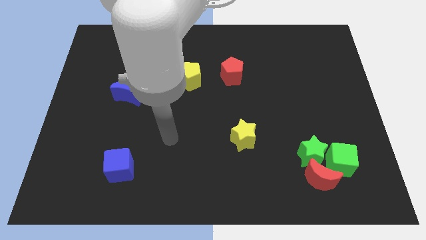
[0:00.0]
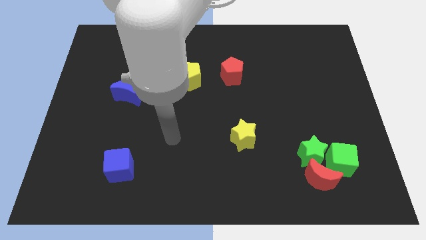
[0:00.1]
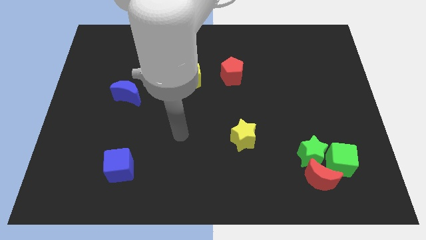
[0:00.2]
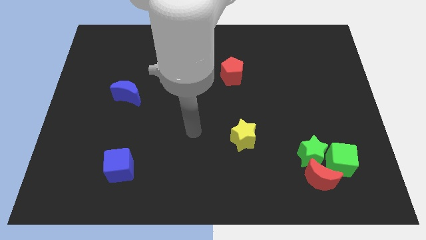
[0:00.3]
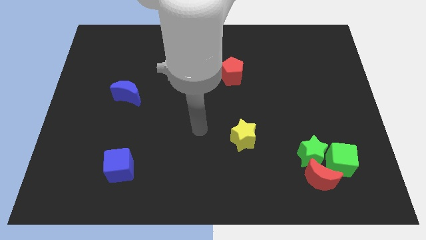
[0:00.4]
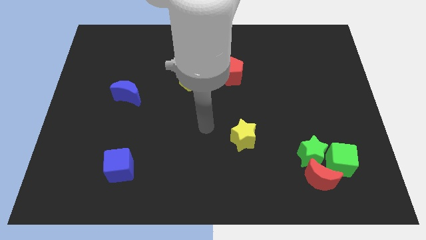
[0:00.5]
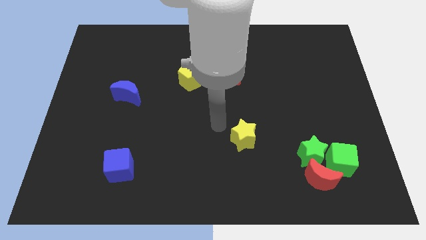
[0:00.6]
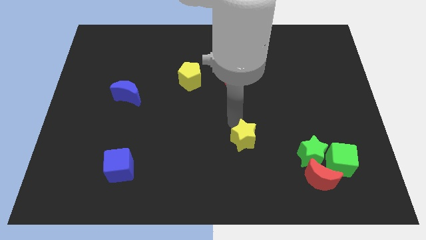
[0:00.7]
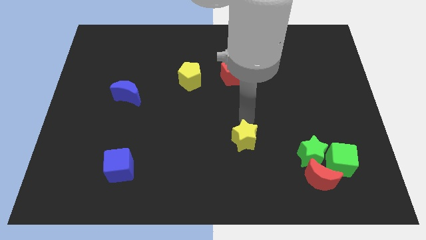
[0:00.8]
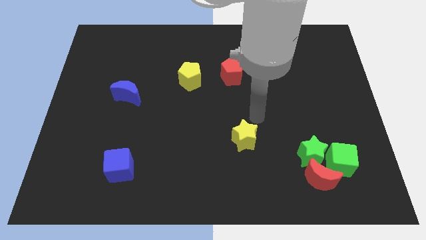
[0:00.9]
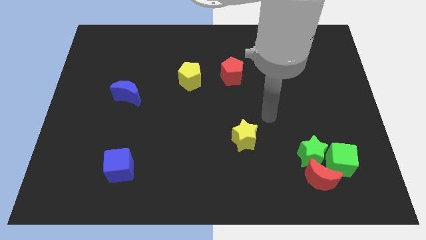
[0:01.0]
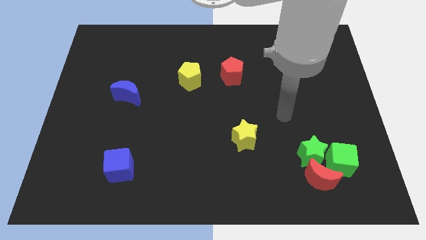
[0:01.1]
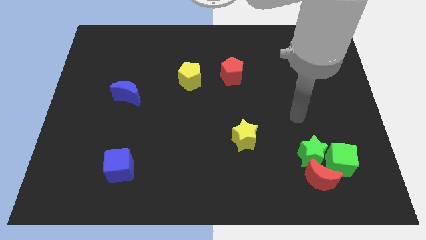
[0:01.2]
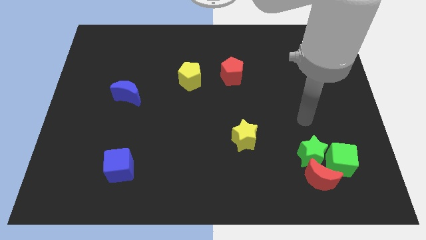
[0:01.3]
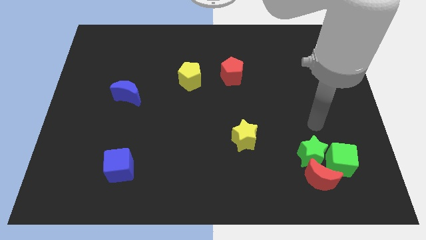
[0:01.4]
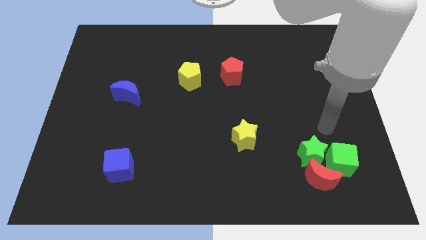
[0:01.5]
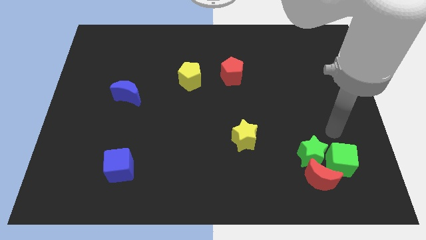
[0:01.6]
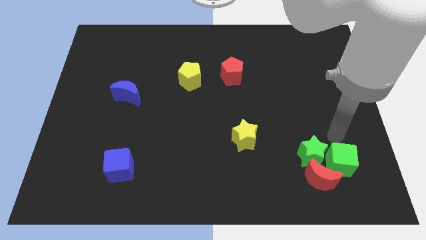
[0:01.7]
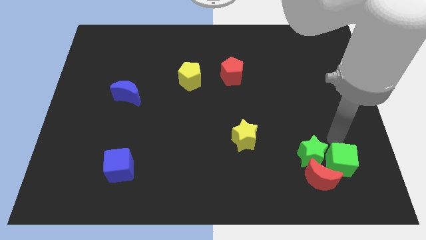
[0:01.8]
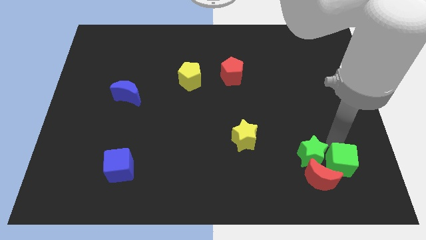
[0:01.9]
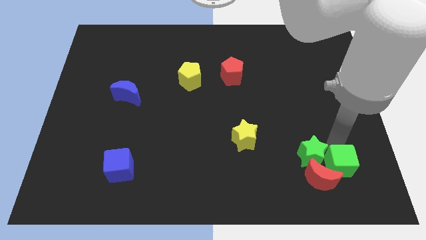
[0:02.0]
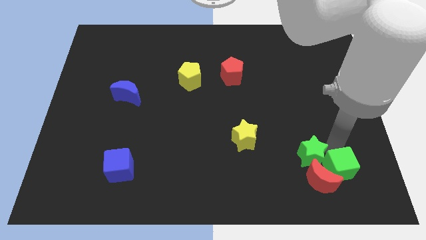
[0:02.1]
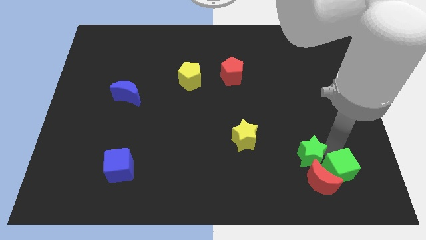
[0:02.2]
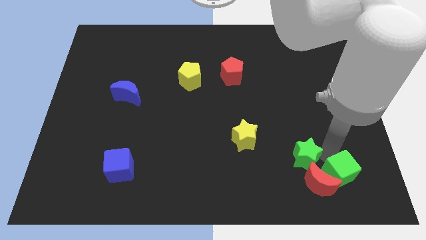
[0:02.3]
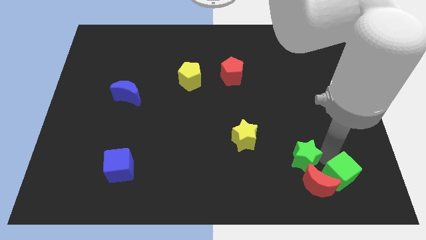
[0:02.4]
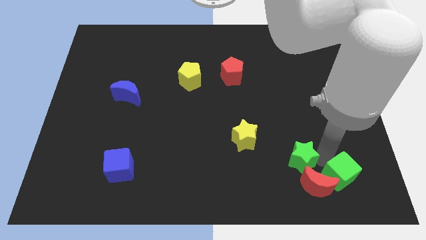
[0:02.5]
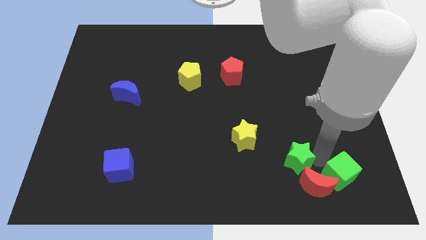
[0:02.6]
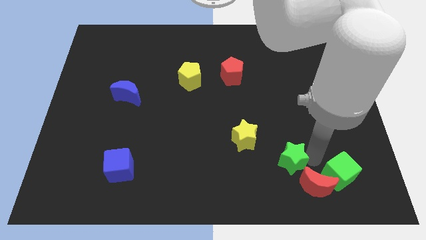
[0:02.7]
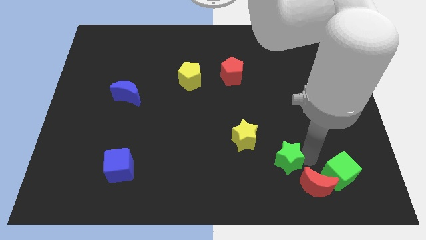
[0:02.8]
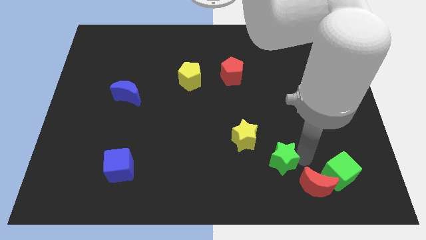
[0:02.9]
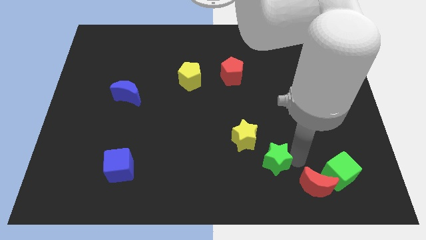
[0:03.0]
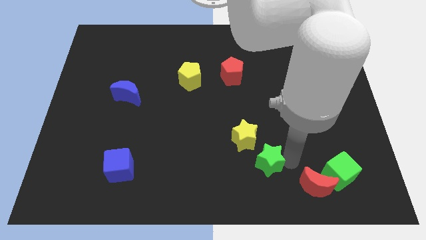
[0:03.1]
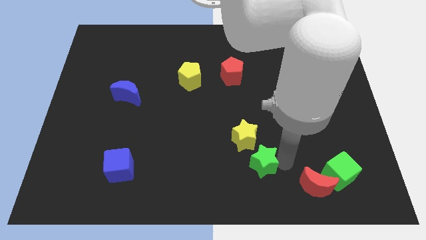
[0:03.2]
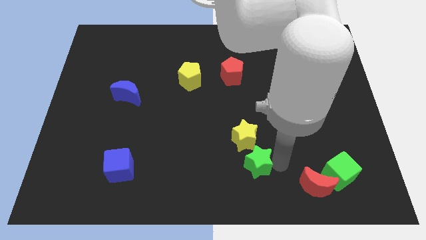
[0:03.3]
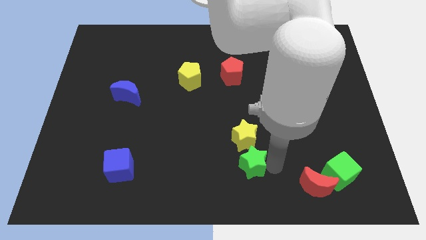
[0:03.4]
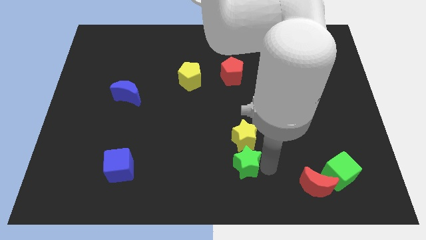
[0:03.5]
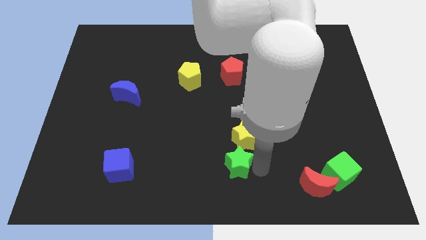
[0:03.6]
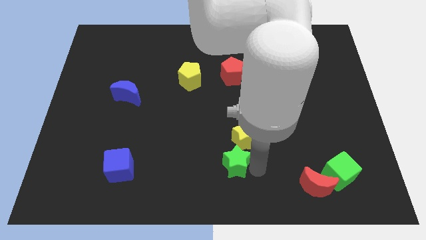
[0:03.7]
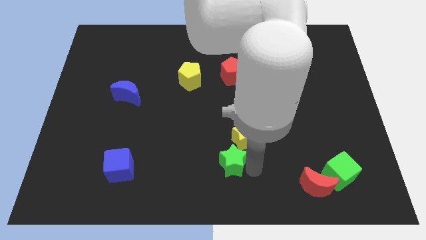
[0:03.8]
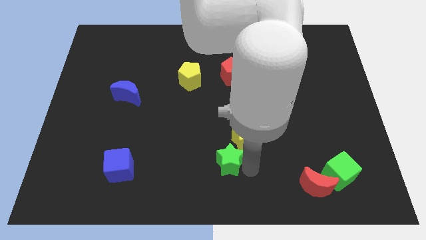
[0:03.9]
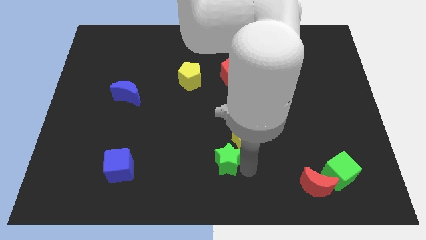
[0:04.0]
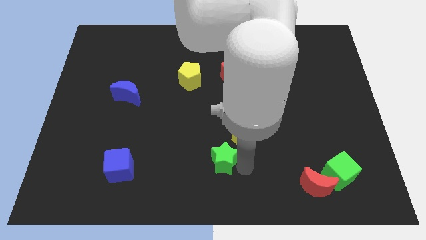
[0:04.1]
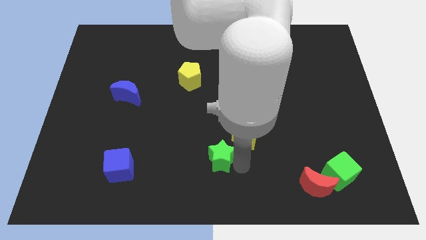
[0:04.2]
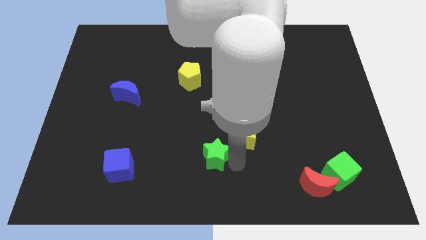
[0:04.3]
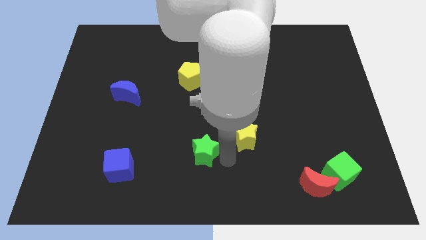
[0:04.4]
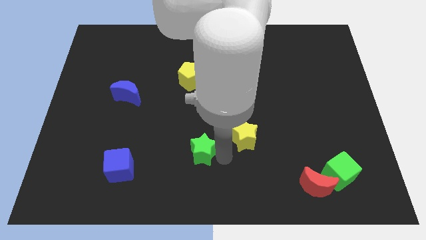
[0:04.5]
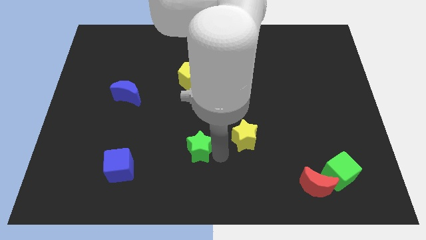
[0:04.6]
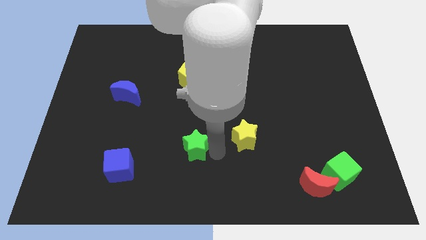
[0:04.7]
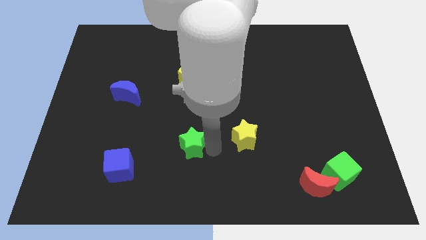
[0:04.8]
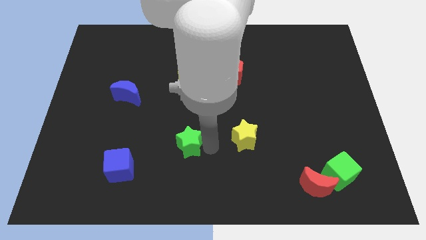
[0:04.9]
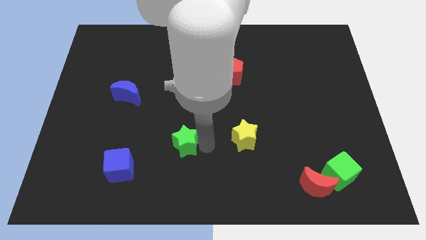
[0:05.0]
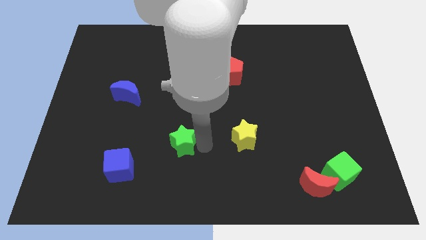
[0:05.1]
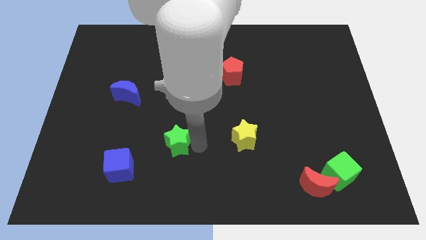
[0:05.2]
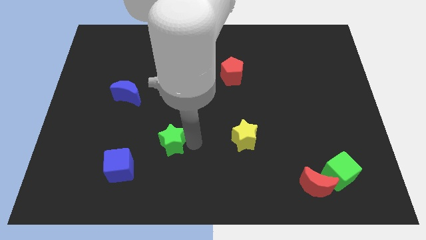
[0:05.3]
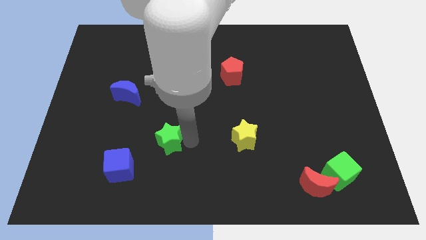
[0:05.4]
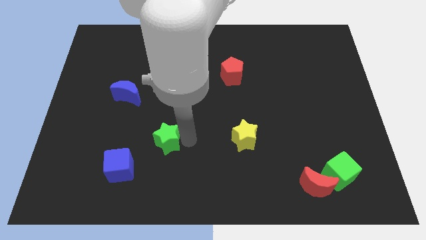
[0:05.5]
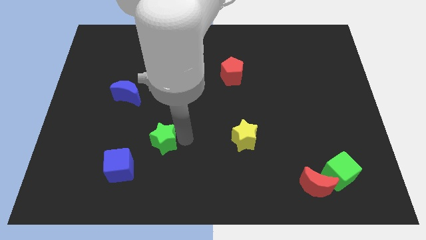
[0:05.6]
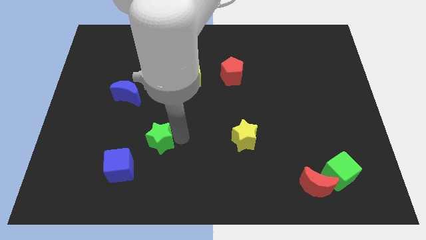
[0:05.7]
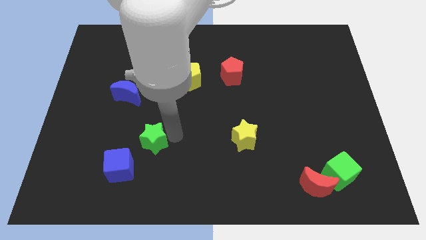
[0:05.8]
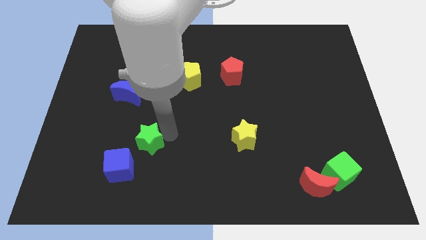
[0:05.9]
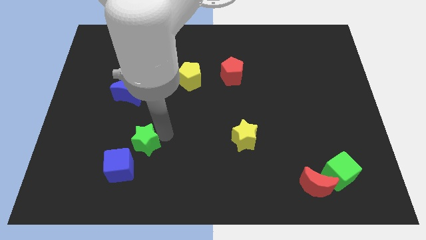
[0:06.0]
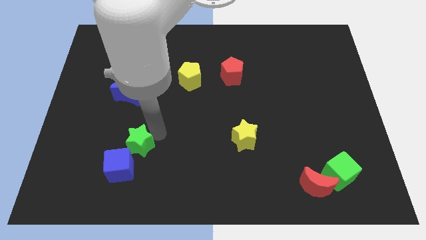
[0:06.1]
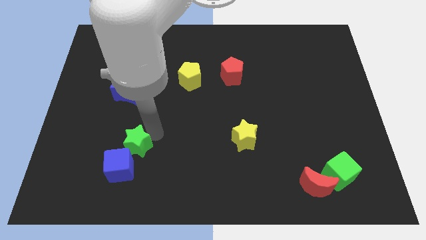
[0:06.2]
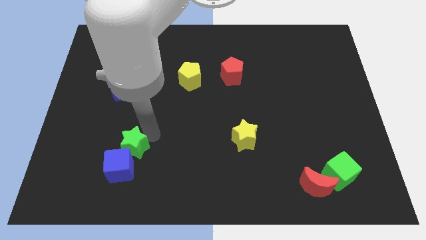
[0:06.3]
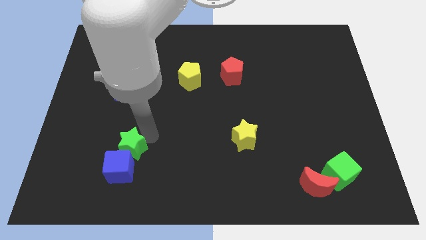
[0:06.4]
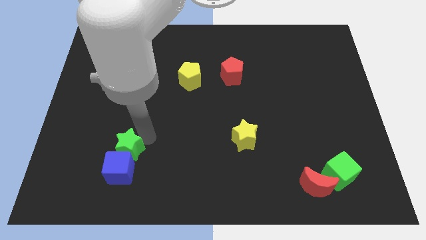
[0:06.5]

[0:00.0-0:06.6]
move the green star close to the blue cube

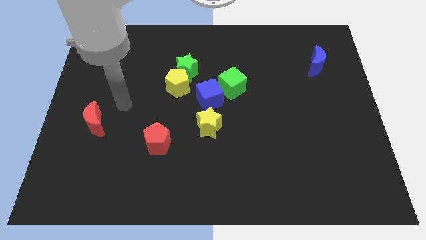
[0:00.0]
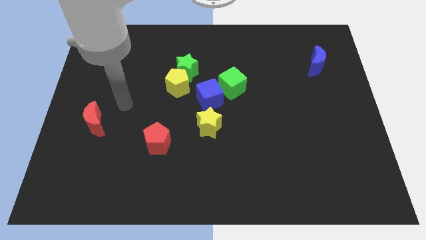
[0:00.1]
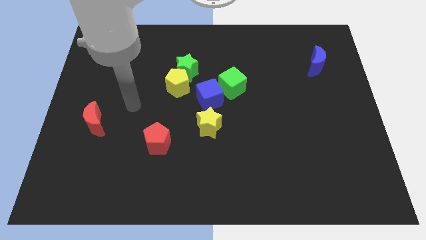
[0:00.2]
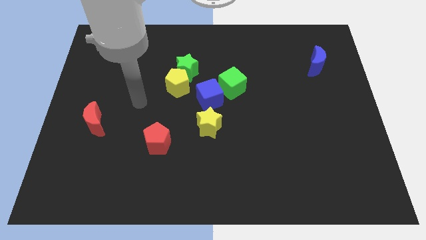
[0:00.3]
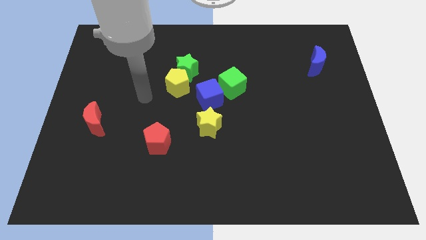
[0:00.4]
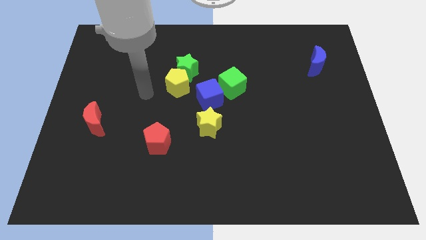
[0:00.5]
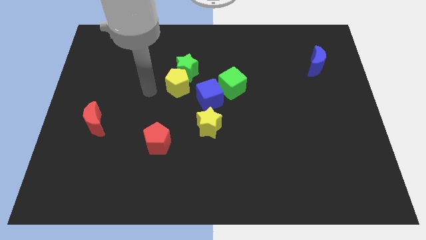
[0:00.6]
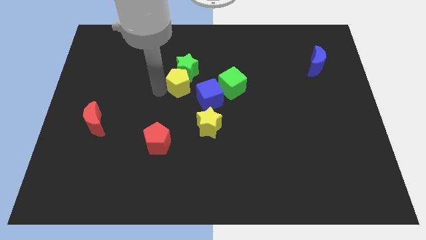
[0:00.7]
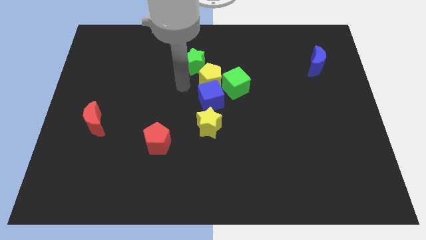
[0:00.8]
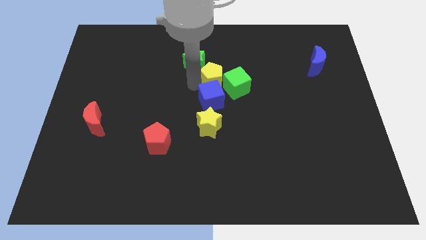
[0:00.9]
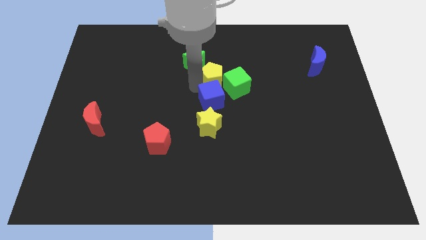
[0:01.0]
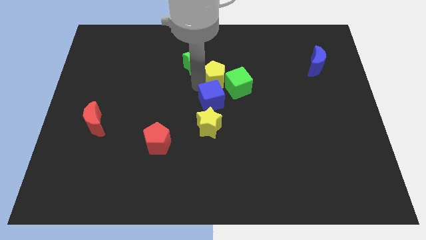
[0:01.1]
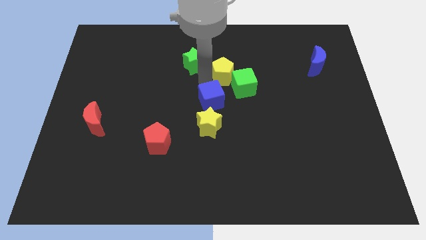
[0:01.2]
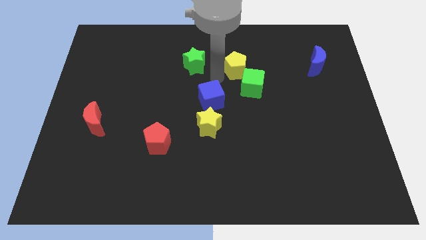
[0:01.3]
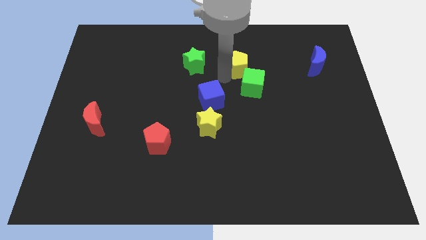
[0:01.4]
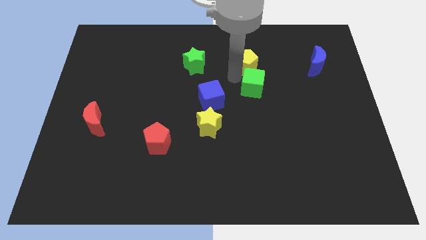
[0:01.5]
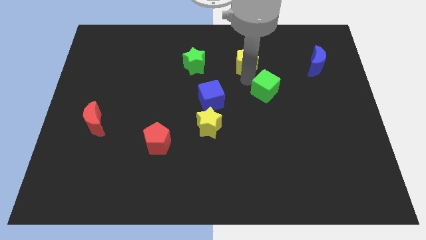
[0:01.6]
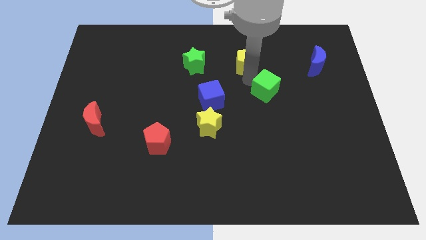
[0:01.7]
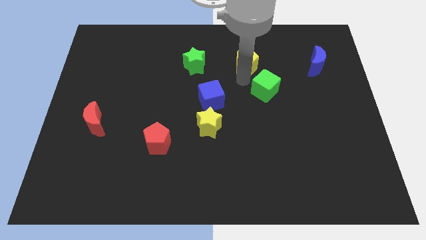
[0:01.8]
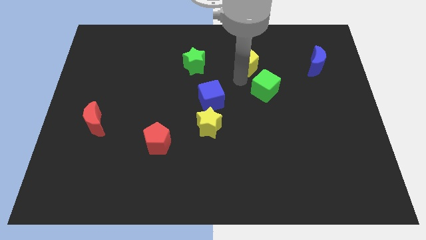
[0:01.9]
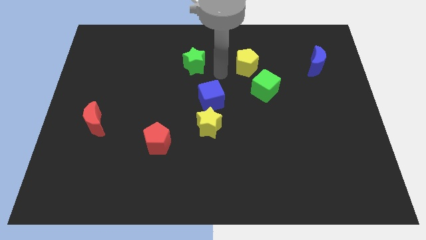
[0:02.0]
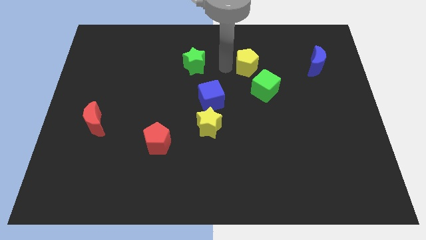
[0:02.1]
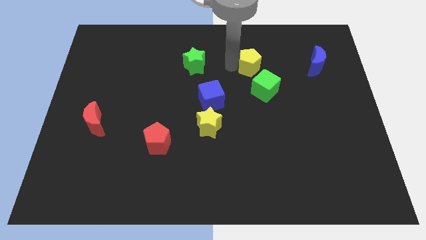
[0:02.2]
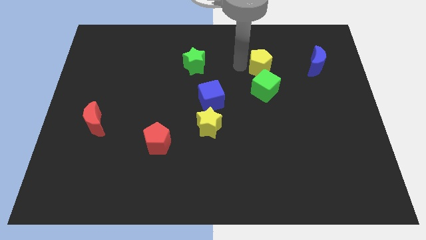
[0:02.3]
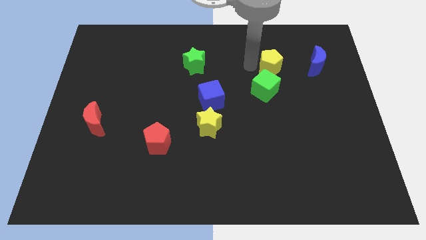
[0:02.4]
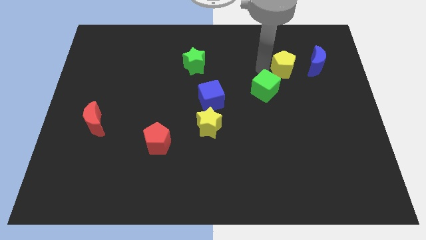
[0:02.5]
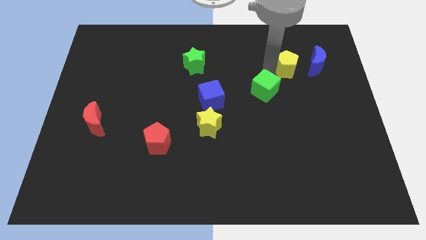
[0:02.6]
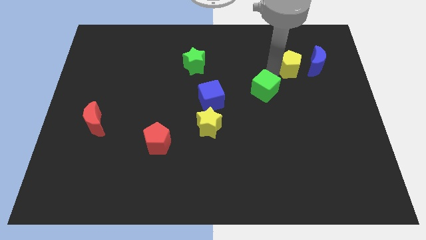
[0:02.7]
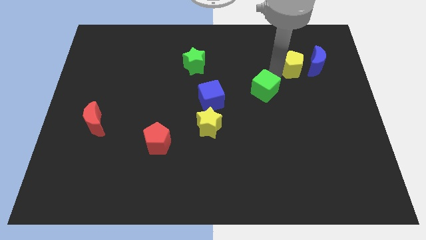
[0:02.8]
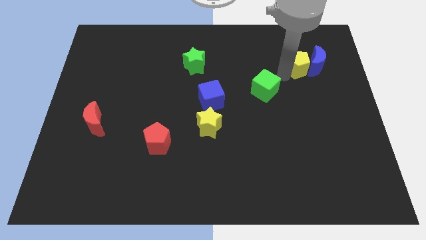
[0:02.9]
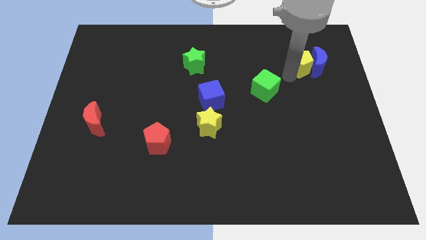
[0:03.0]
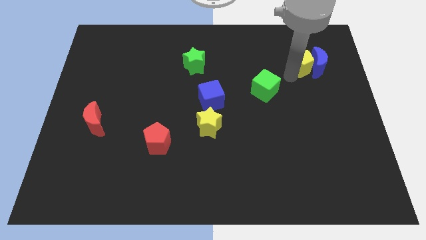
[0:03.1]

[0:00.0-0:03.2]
slide the yellow pentagon to the blue moon
